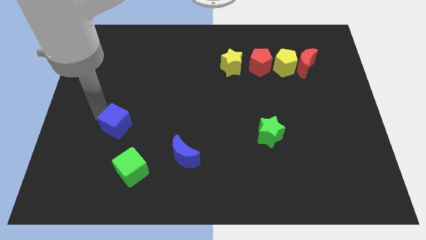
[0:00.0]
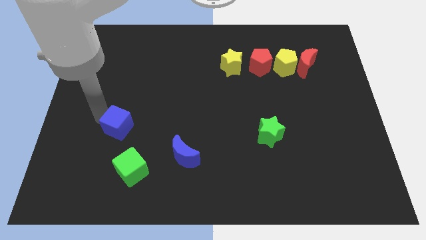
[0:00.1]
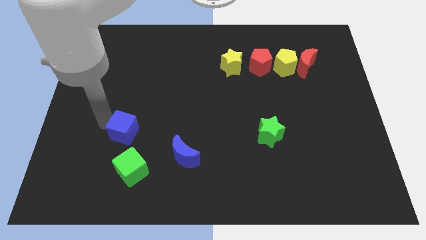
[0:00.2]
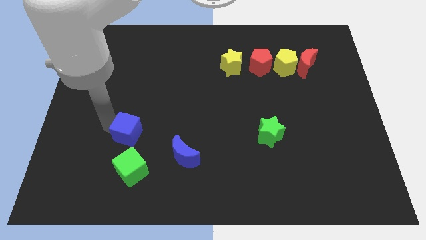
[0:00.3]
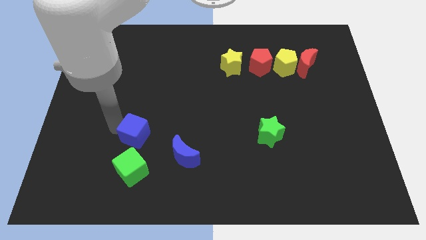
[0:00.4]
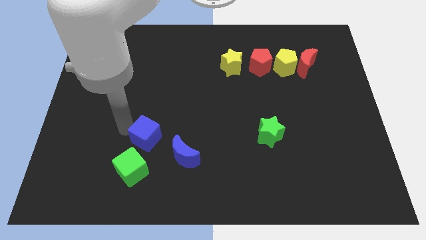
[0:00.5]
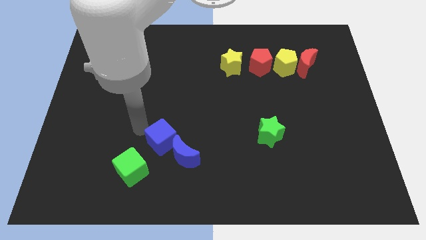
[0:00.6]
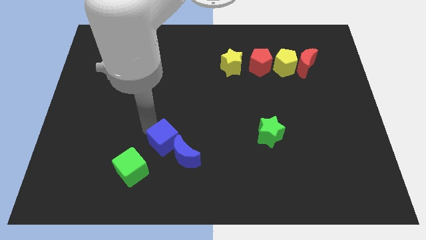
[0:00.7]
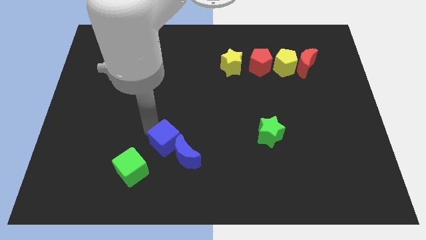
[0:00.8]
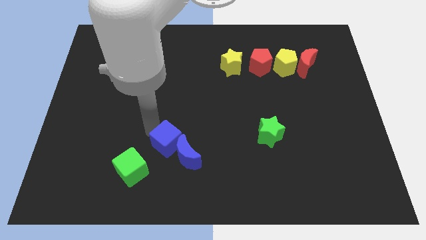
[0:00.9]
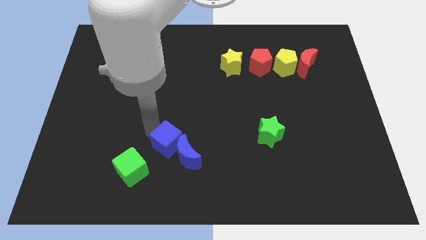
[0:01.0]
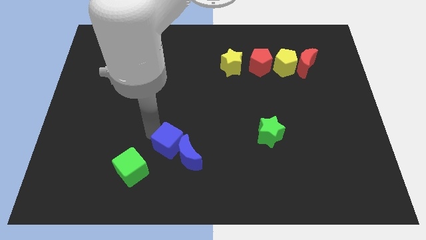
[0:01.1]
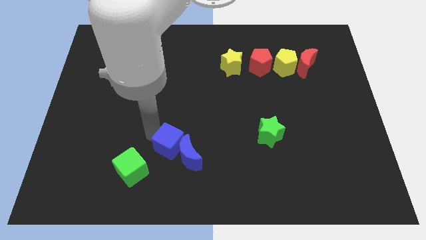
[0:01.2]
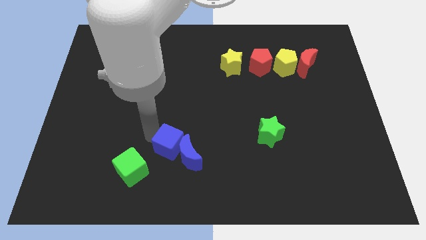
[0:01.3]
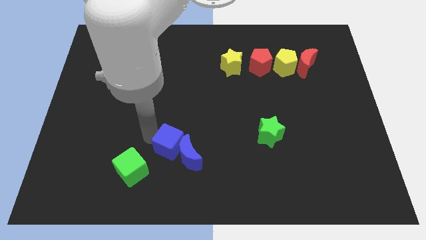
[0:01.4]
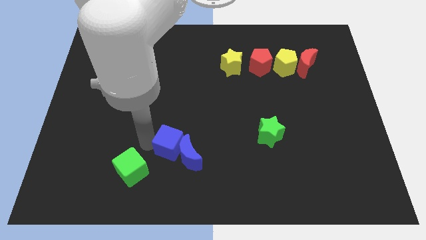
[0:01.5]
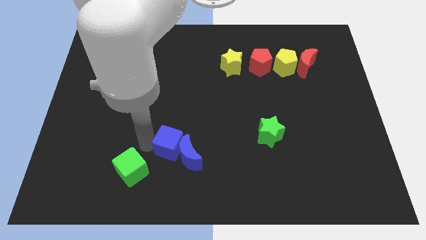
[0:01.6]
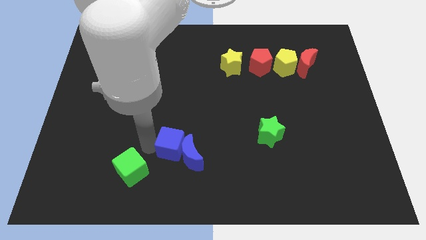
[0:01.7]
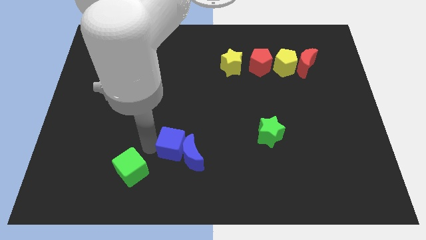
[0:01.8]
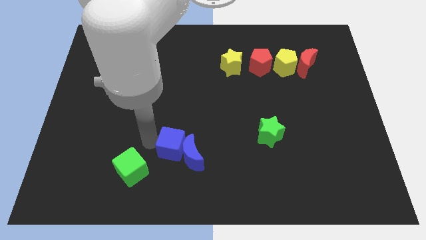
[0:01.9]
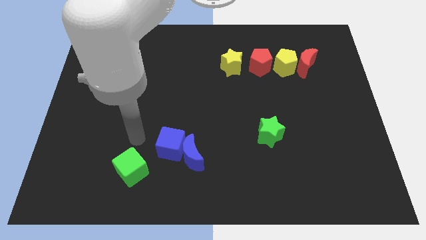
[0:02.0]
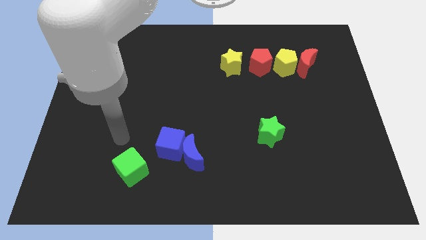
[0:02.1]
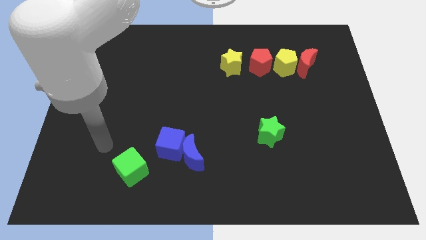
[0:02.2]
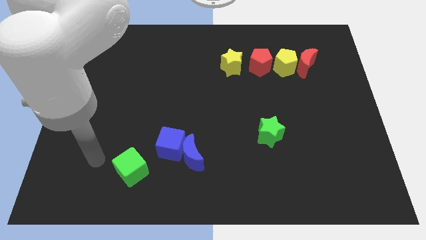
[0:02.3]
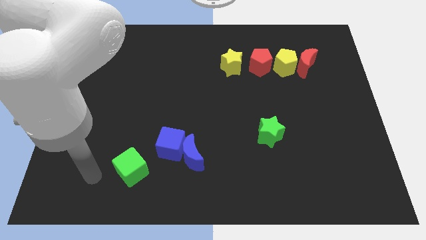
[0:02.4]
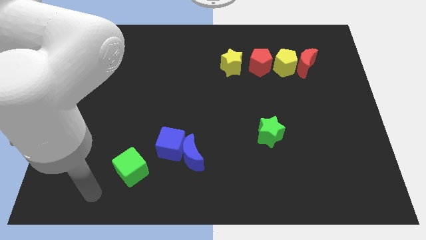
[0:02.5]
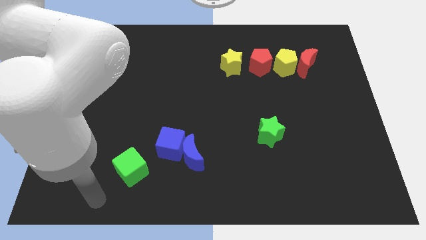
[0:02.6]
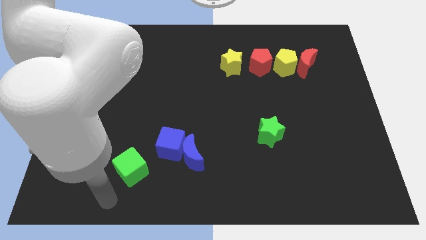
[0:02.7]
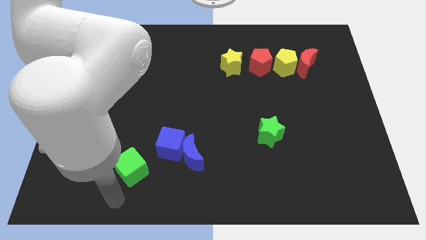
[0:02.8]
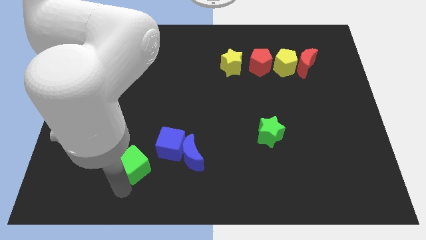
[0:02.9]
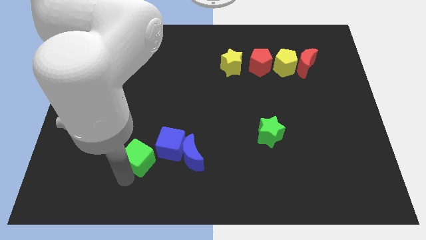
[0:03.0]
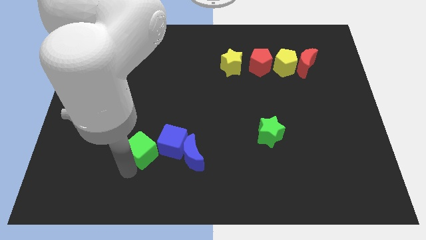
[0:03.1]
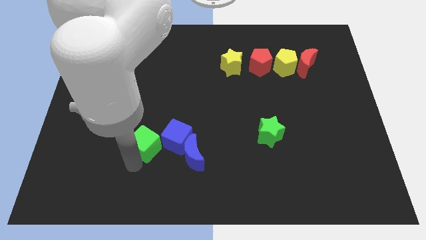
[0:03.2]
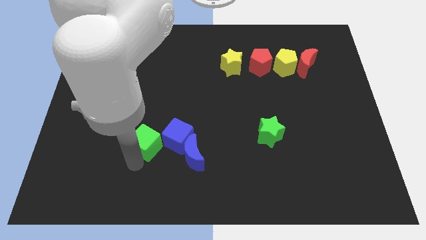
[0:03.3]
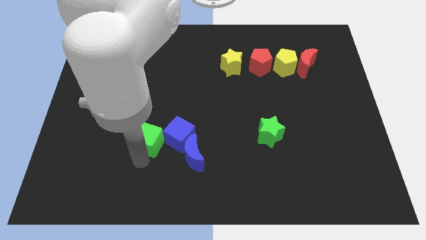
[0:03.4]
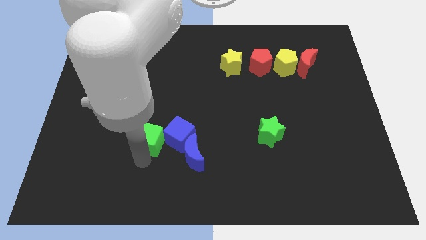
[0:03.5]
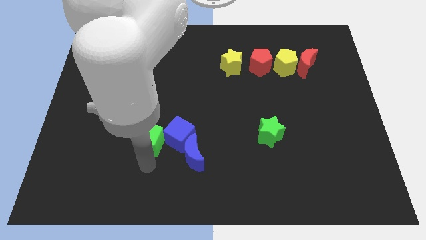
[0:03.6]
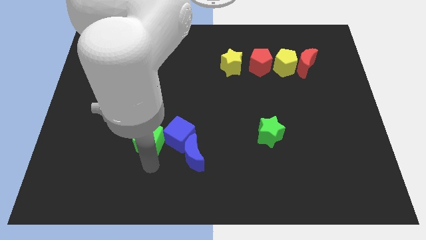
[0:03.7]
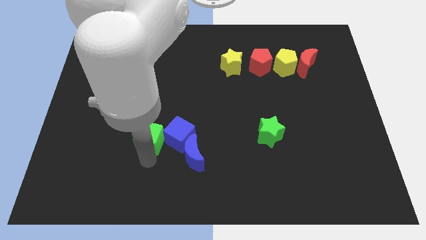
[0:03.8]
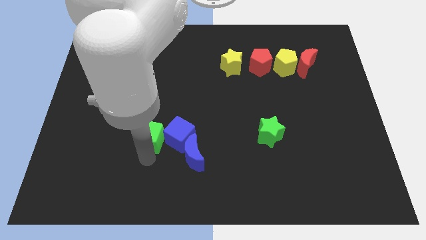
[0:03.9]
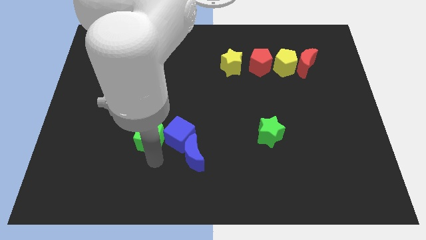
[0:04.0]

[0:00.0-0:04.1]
push the green cube into the blue cube

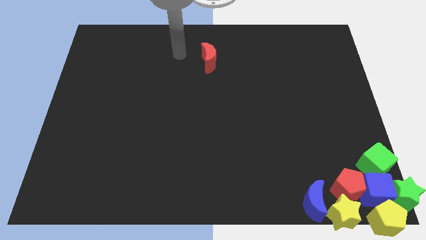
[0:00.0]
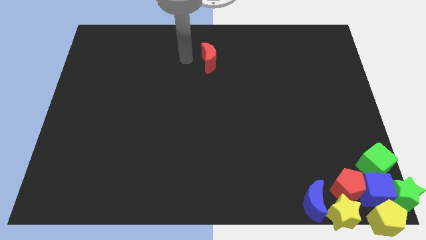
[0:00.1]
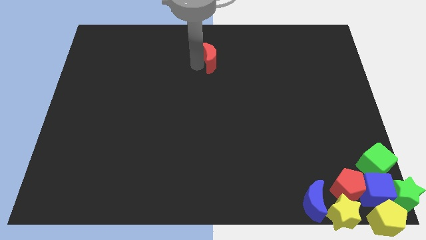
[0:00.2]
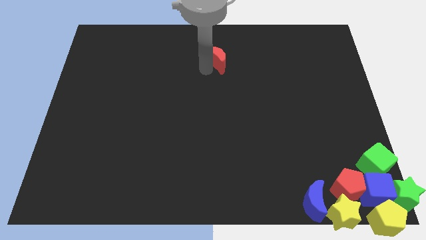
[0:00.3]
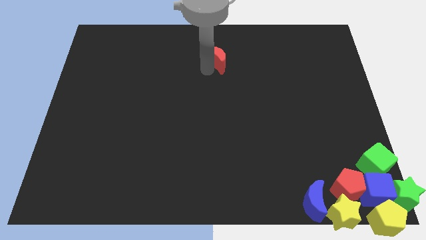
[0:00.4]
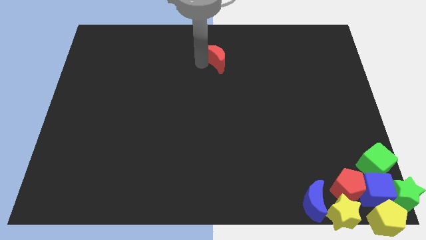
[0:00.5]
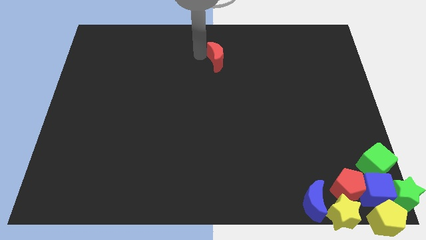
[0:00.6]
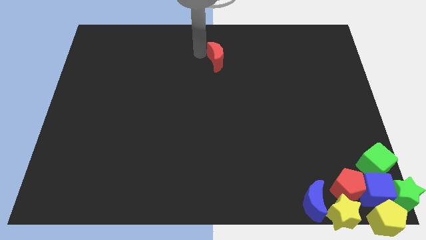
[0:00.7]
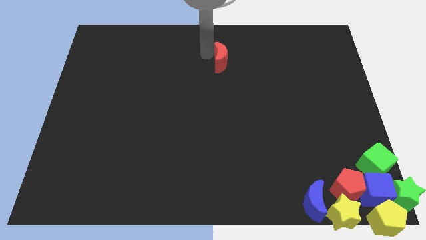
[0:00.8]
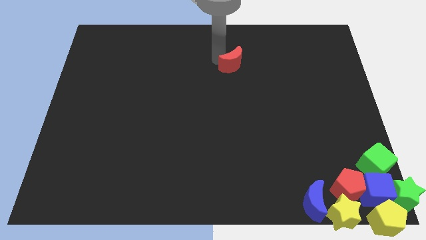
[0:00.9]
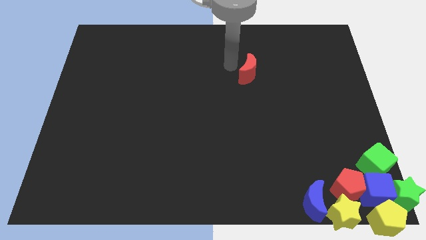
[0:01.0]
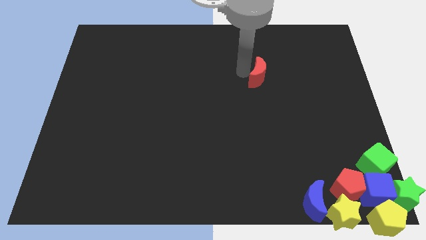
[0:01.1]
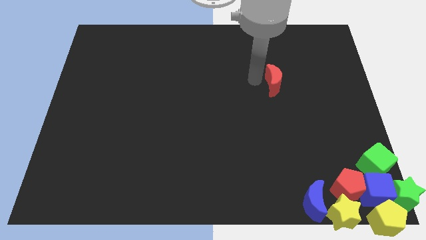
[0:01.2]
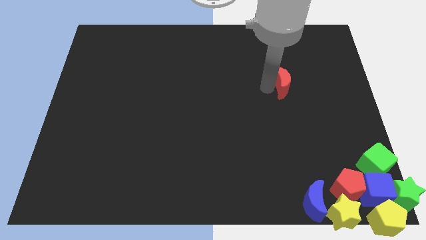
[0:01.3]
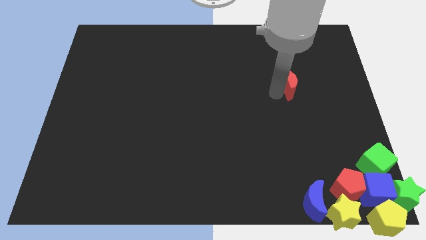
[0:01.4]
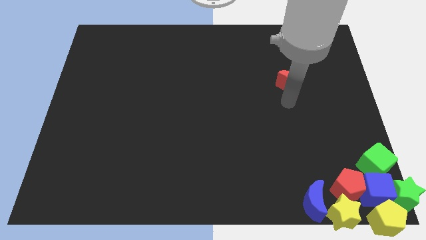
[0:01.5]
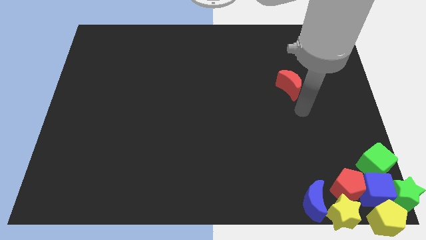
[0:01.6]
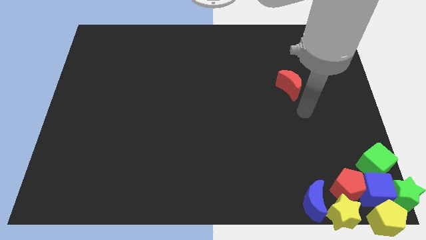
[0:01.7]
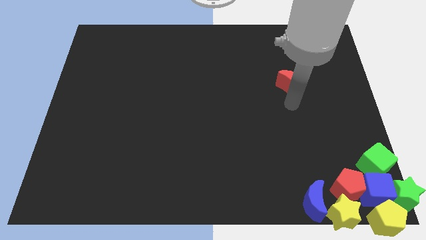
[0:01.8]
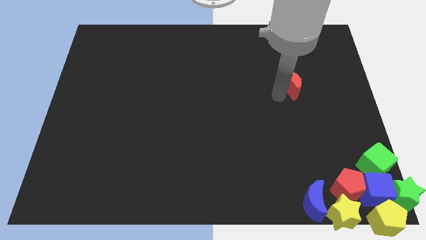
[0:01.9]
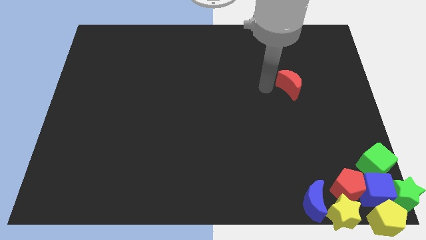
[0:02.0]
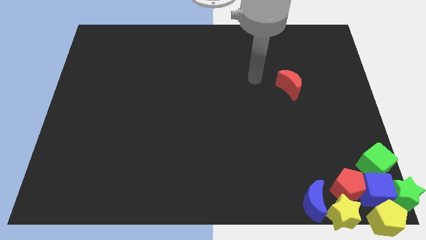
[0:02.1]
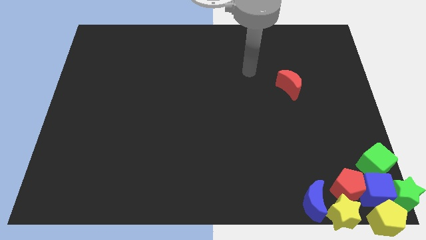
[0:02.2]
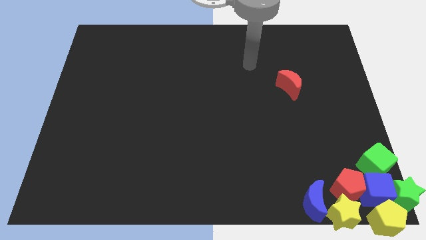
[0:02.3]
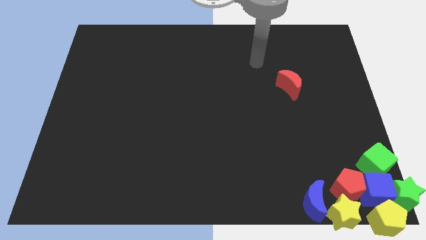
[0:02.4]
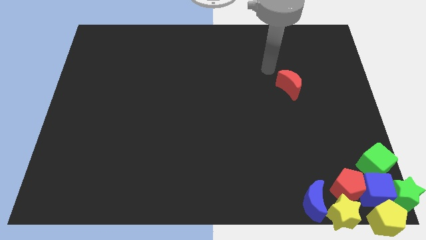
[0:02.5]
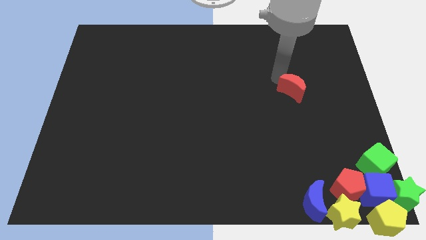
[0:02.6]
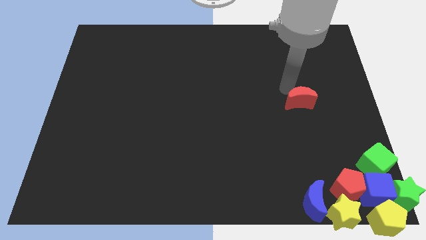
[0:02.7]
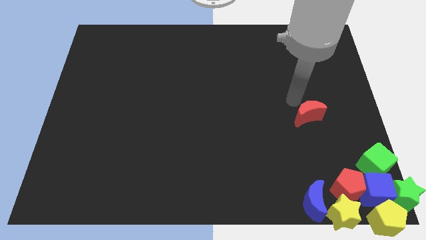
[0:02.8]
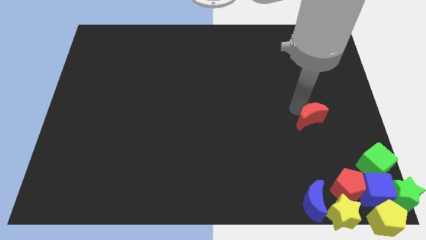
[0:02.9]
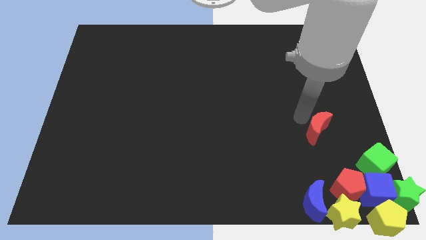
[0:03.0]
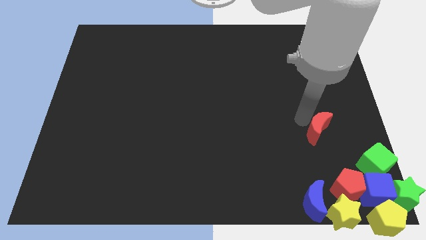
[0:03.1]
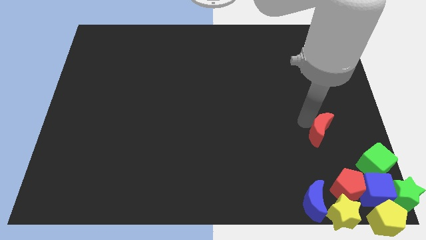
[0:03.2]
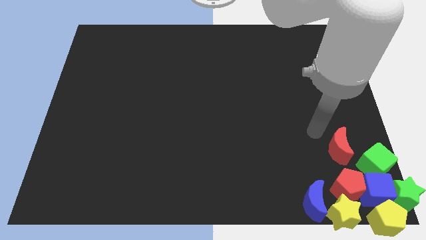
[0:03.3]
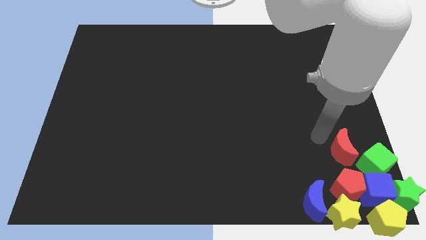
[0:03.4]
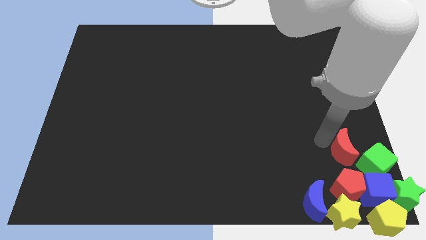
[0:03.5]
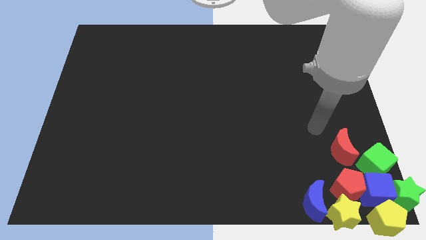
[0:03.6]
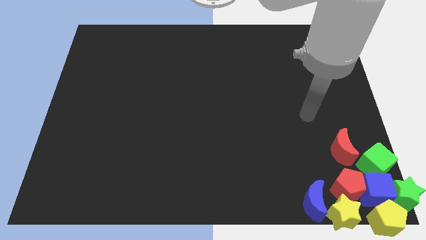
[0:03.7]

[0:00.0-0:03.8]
push the red moon to left side of the green star

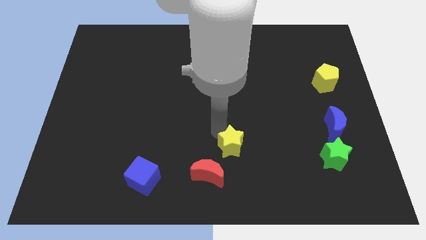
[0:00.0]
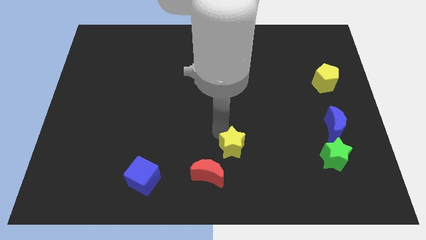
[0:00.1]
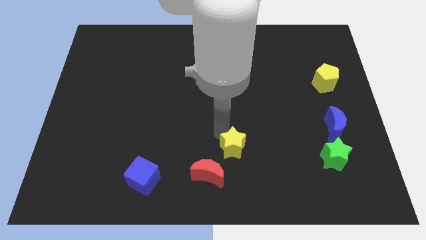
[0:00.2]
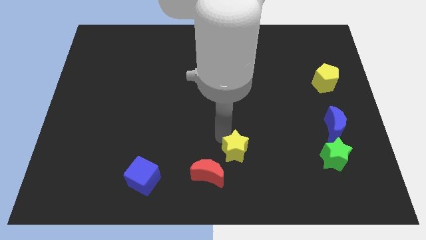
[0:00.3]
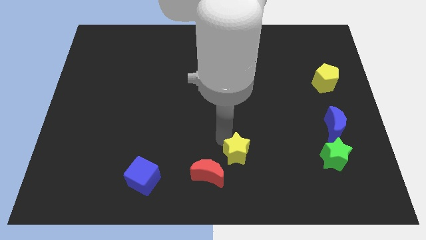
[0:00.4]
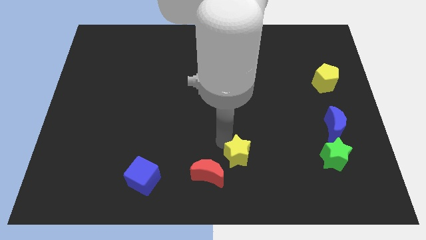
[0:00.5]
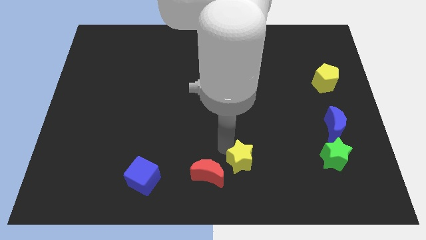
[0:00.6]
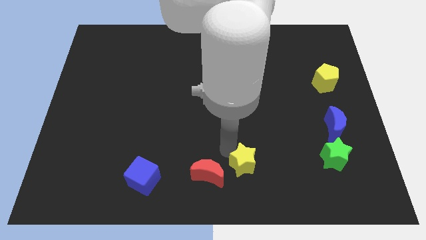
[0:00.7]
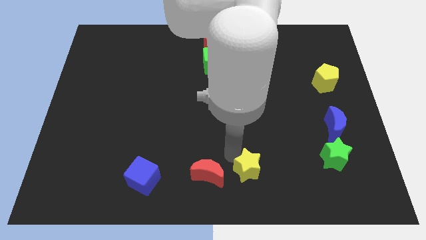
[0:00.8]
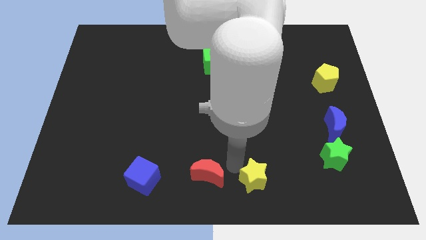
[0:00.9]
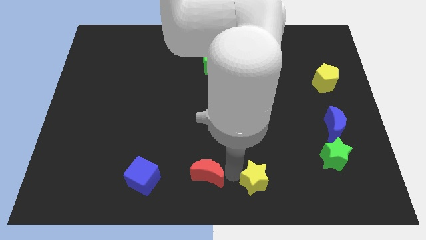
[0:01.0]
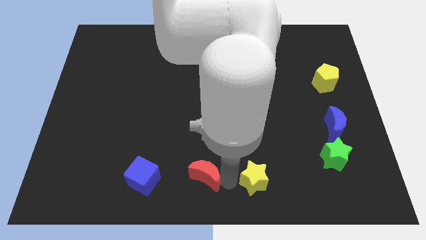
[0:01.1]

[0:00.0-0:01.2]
place yellow star to the right side of the red moon
